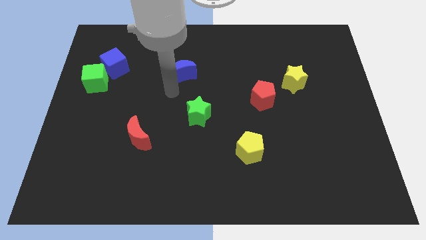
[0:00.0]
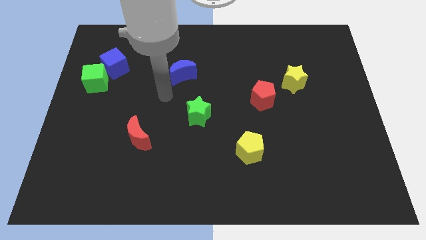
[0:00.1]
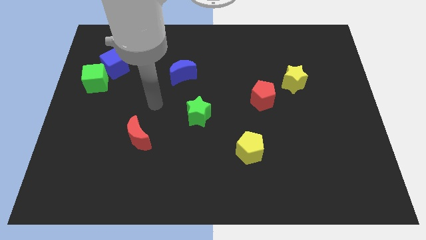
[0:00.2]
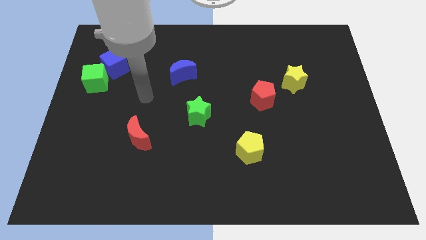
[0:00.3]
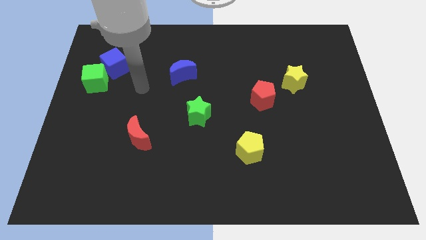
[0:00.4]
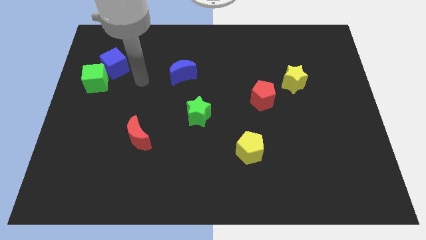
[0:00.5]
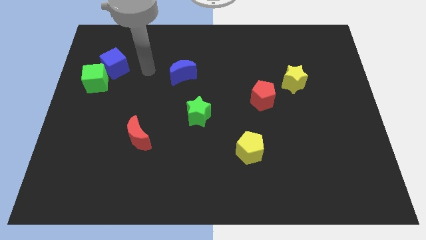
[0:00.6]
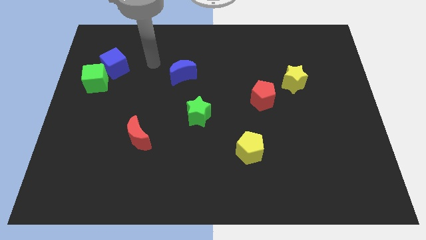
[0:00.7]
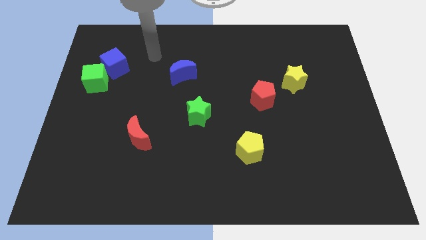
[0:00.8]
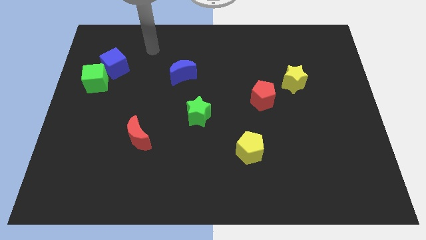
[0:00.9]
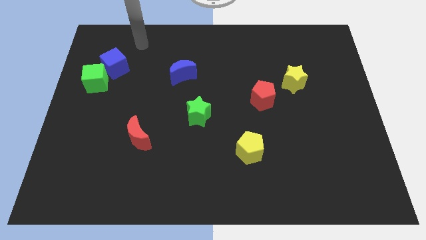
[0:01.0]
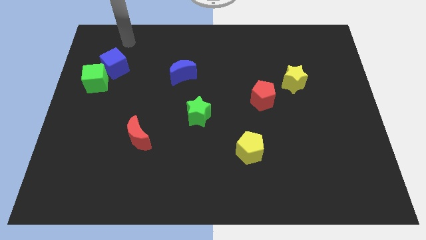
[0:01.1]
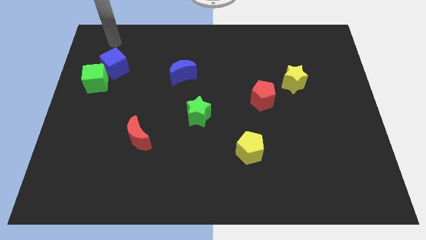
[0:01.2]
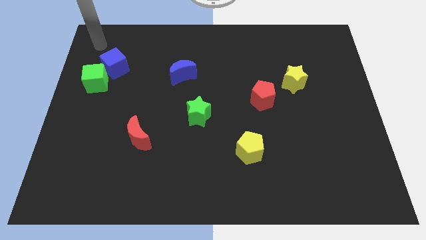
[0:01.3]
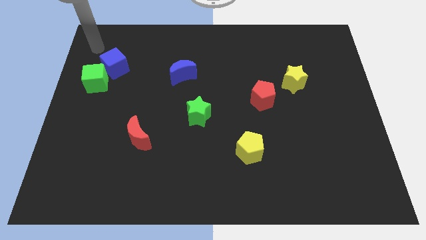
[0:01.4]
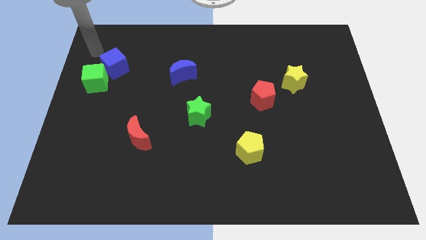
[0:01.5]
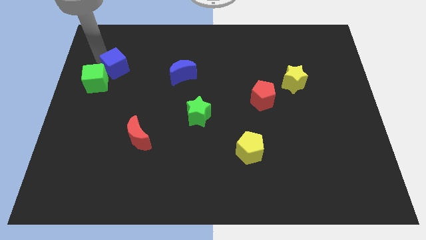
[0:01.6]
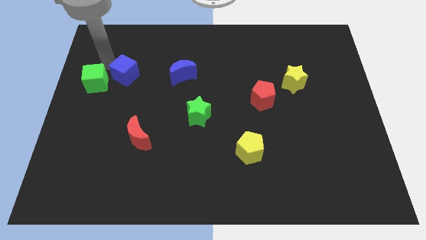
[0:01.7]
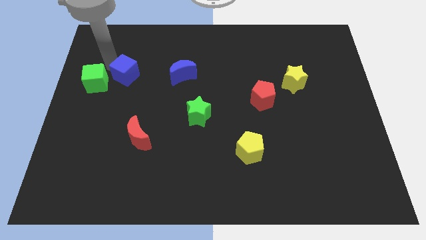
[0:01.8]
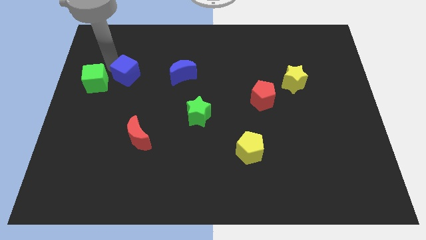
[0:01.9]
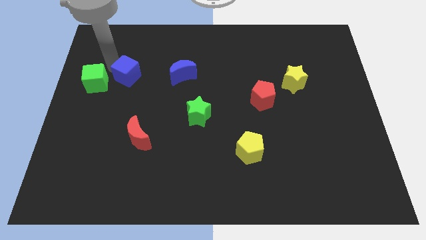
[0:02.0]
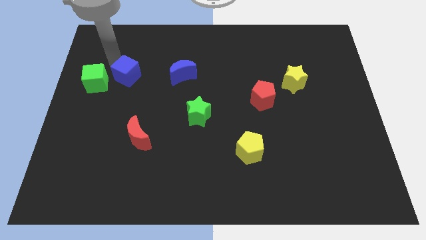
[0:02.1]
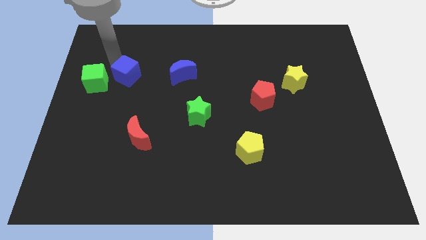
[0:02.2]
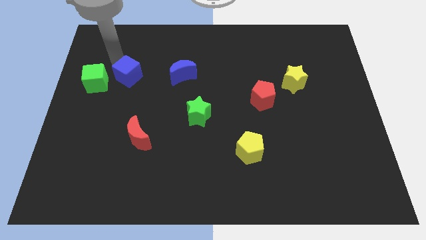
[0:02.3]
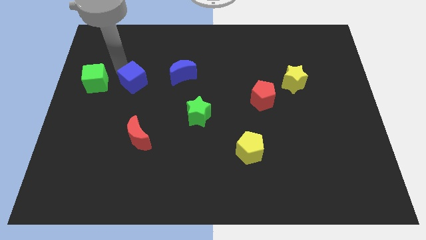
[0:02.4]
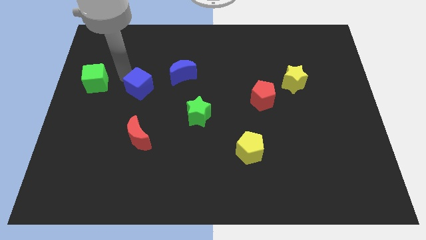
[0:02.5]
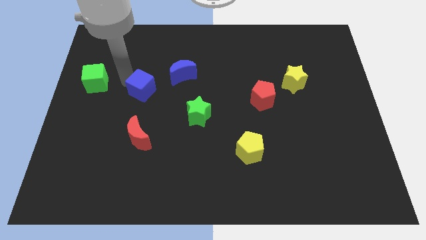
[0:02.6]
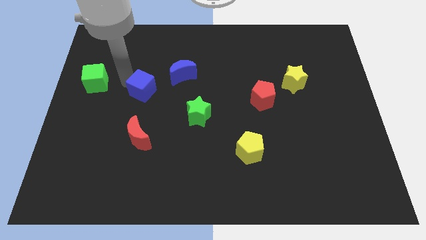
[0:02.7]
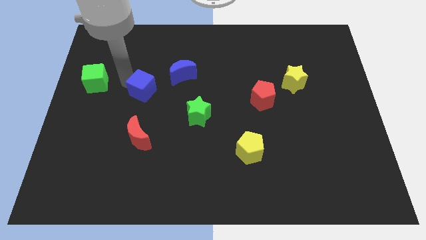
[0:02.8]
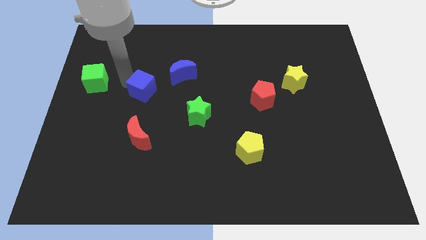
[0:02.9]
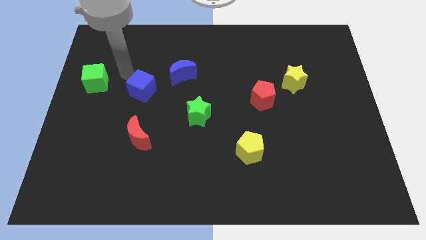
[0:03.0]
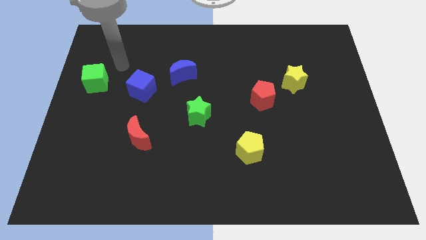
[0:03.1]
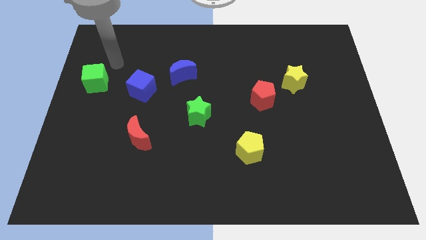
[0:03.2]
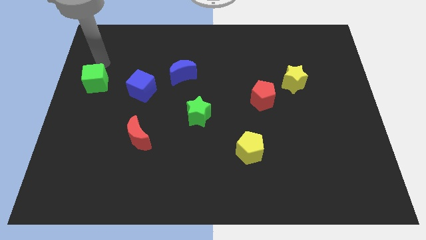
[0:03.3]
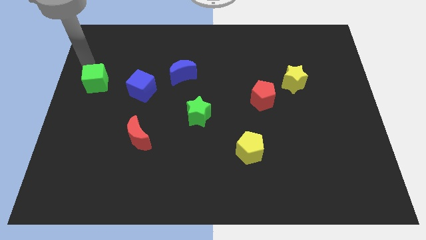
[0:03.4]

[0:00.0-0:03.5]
push blue cube diagonally to the blue crescent

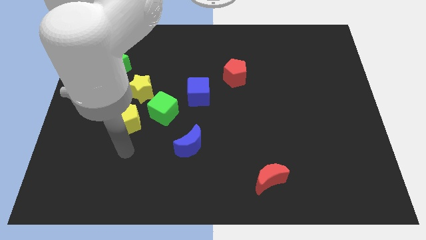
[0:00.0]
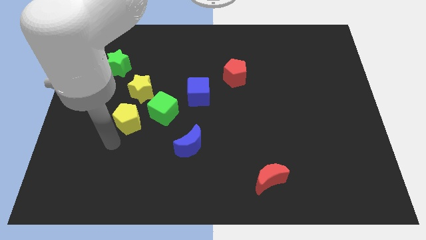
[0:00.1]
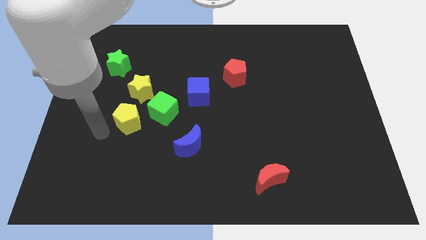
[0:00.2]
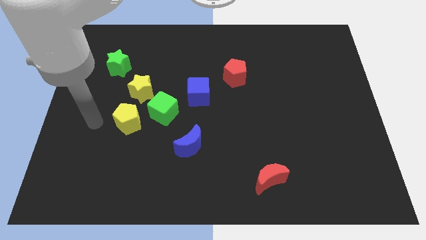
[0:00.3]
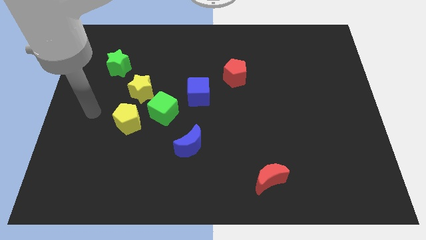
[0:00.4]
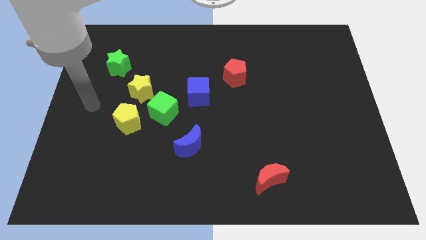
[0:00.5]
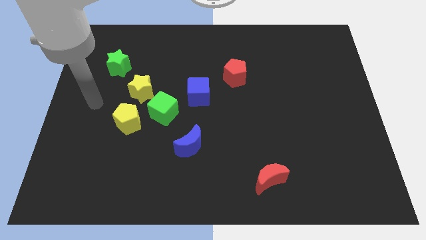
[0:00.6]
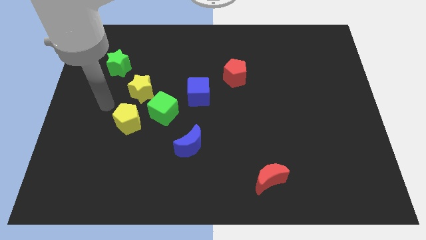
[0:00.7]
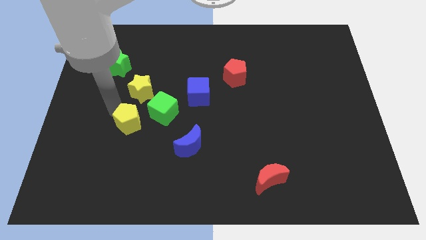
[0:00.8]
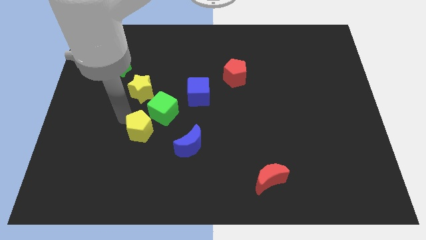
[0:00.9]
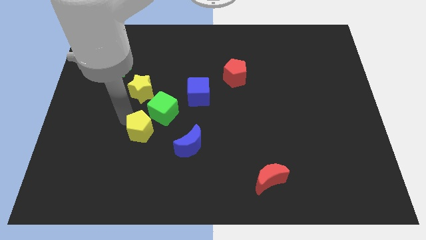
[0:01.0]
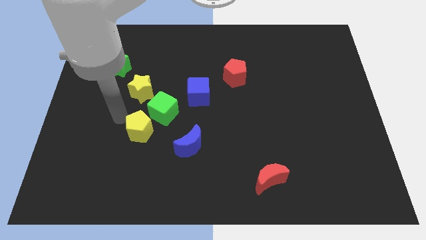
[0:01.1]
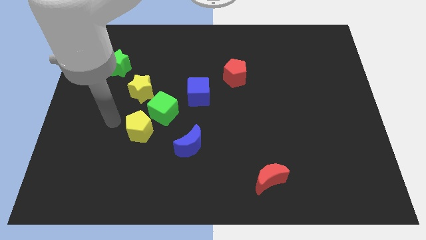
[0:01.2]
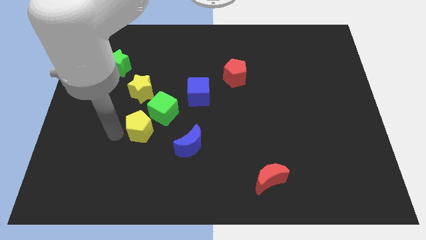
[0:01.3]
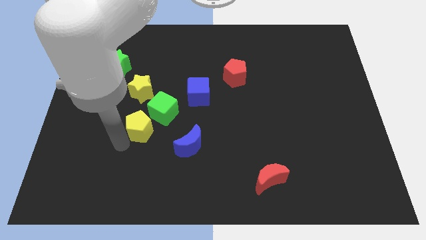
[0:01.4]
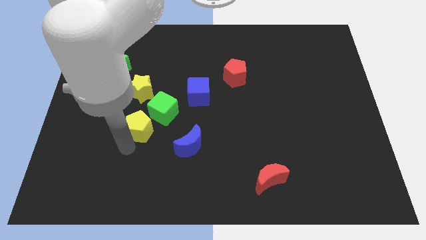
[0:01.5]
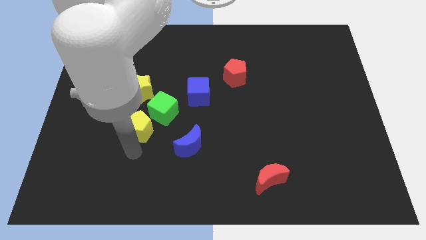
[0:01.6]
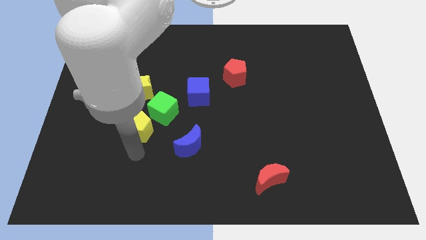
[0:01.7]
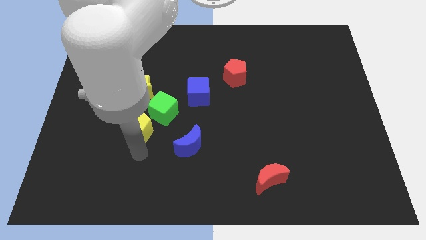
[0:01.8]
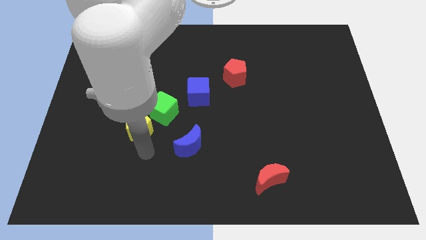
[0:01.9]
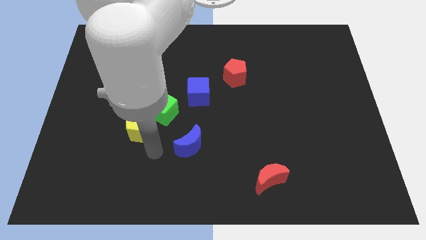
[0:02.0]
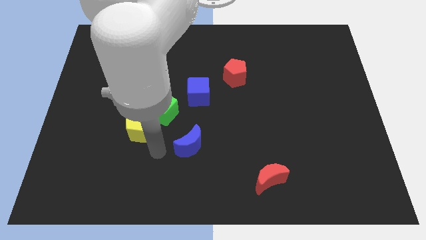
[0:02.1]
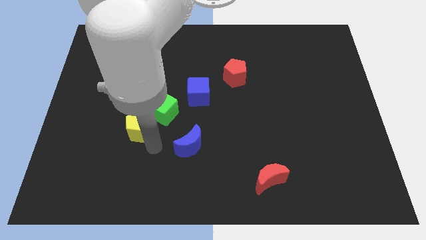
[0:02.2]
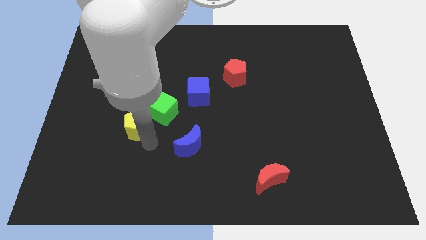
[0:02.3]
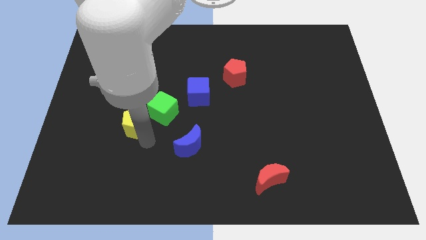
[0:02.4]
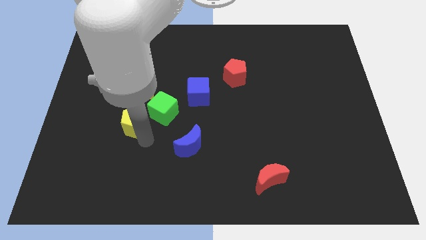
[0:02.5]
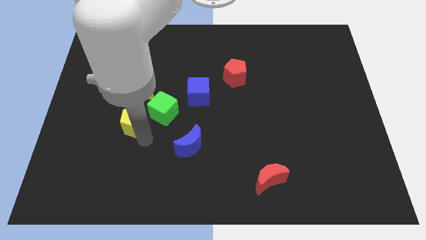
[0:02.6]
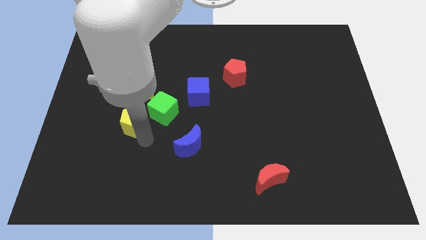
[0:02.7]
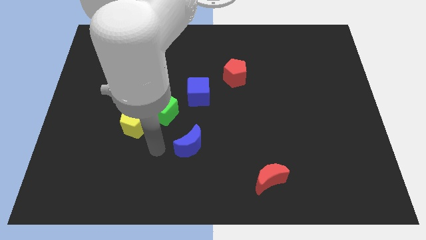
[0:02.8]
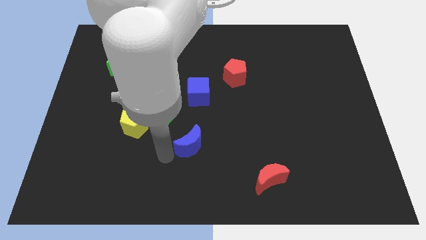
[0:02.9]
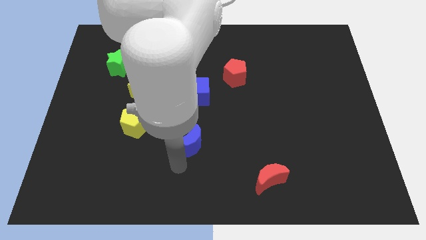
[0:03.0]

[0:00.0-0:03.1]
adjust the yellow pentagon to form a triangle with the yellow star and the green cube

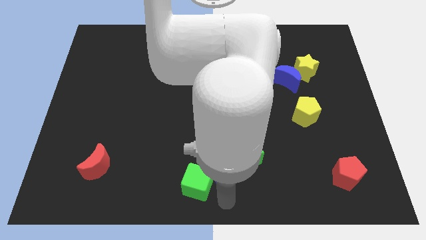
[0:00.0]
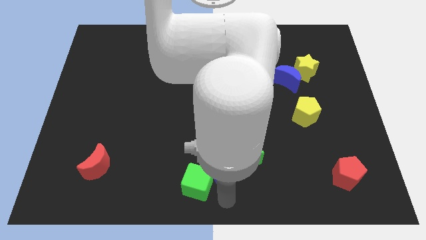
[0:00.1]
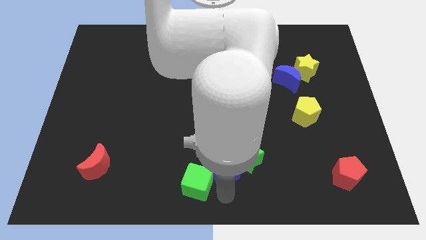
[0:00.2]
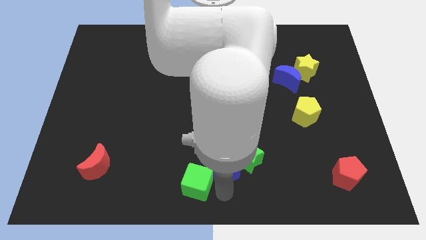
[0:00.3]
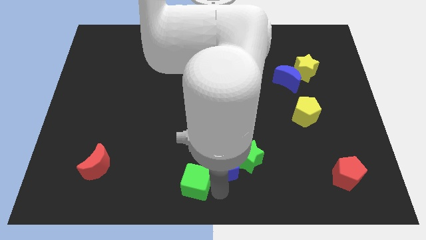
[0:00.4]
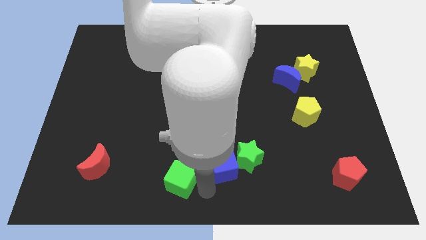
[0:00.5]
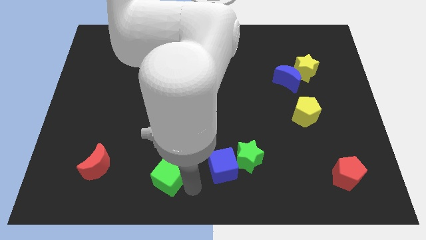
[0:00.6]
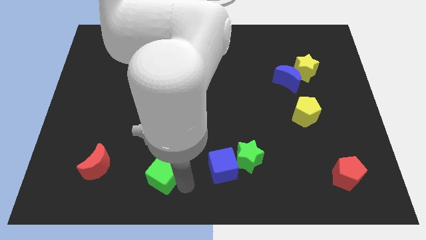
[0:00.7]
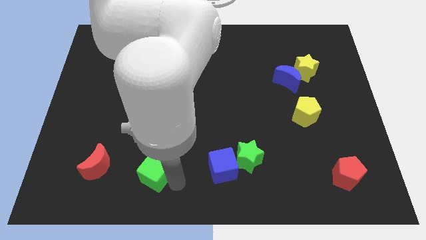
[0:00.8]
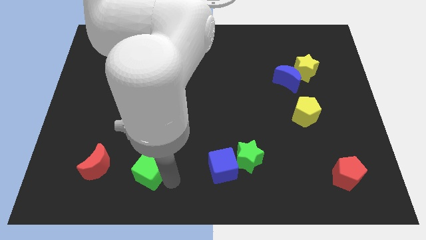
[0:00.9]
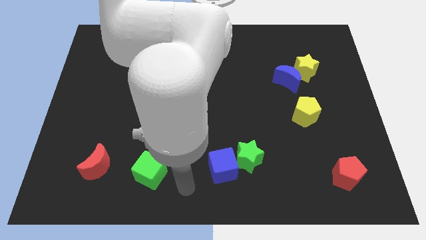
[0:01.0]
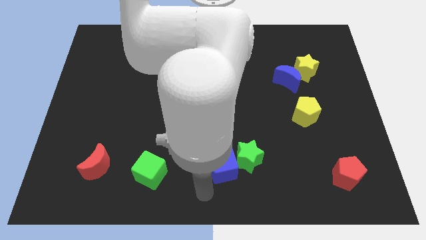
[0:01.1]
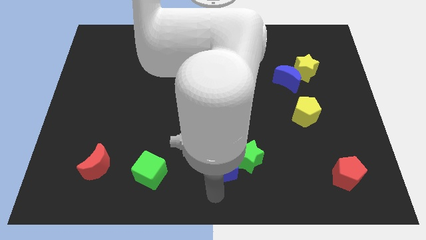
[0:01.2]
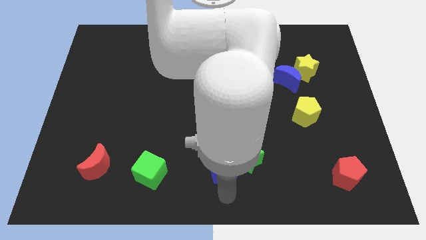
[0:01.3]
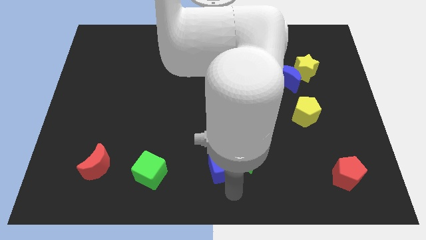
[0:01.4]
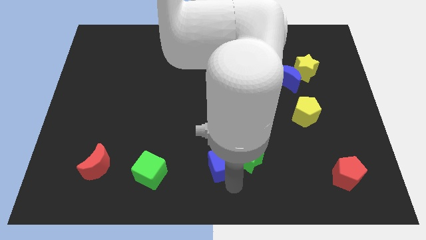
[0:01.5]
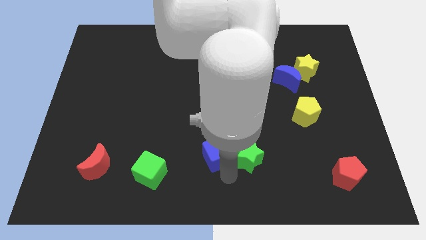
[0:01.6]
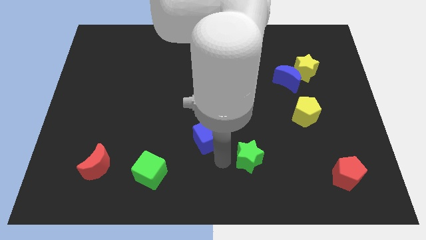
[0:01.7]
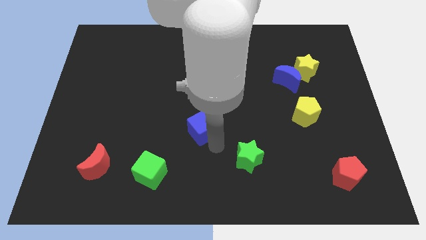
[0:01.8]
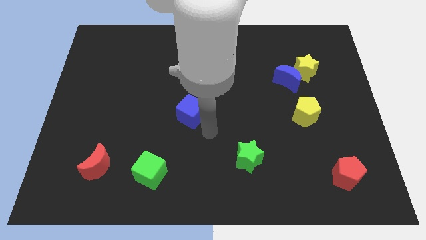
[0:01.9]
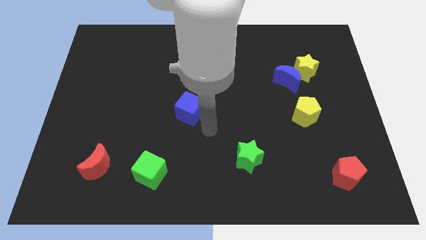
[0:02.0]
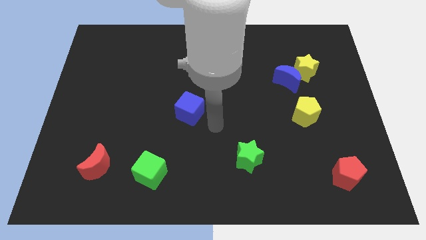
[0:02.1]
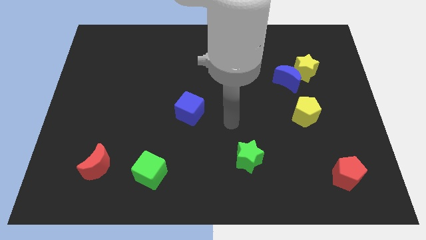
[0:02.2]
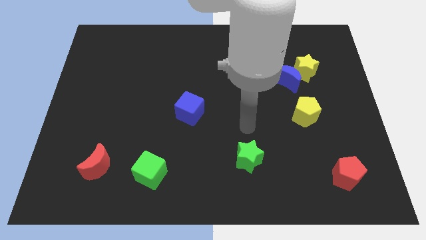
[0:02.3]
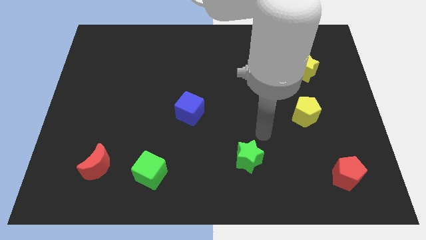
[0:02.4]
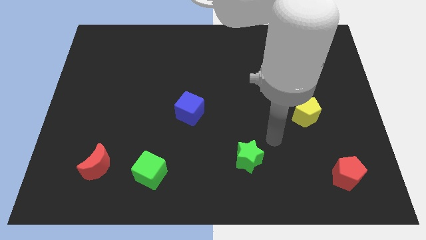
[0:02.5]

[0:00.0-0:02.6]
push the blue cube away from the green star
